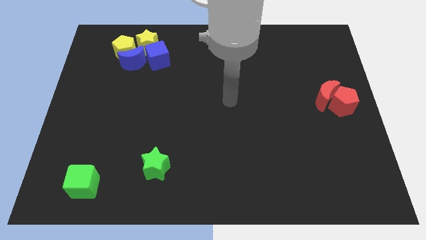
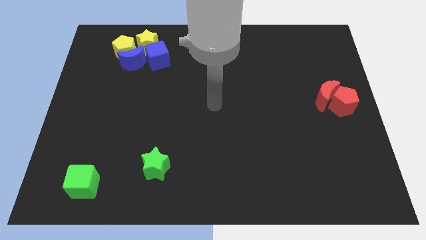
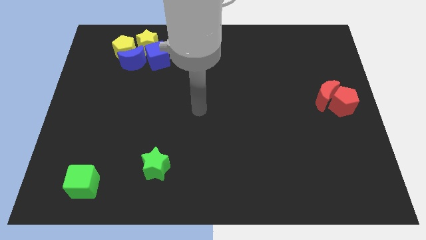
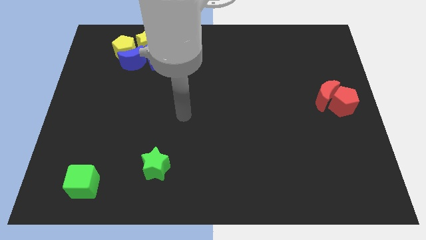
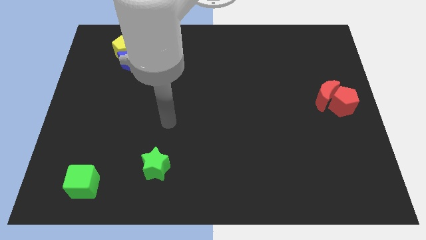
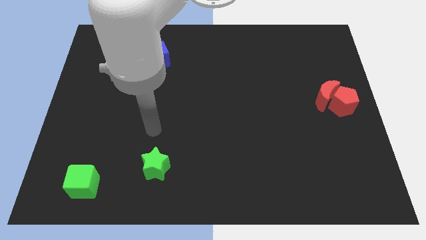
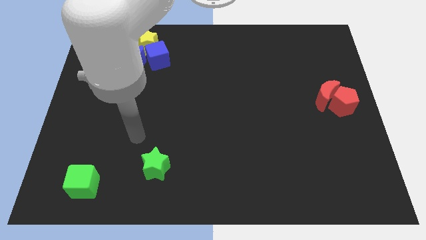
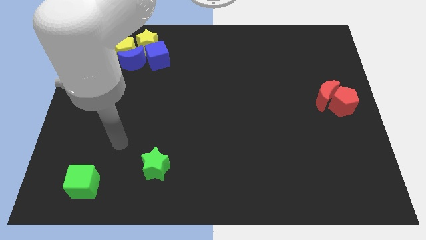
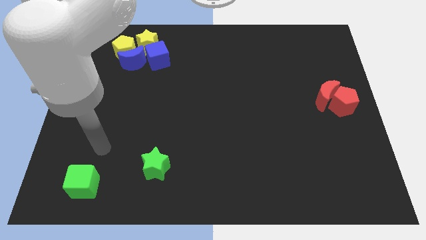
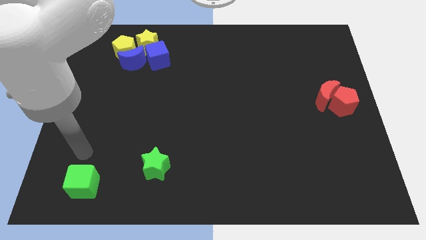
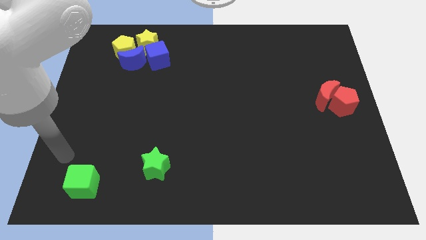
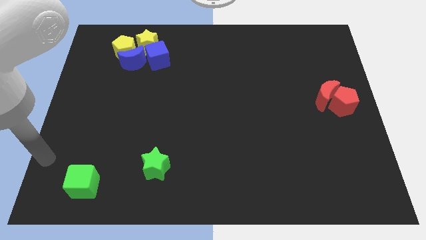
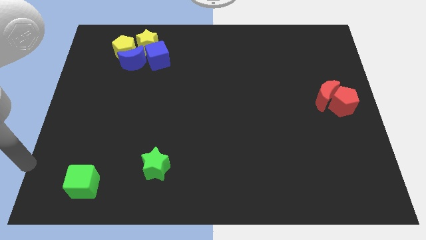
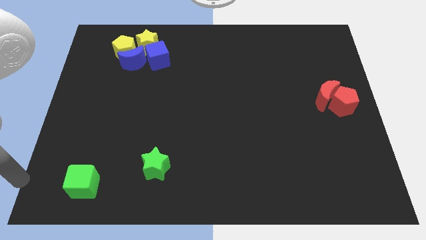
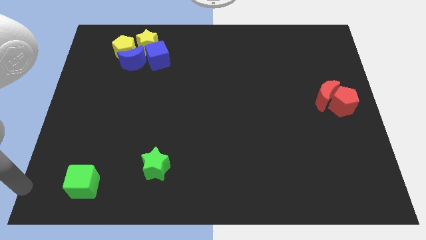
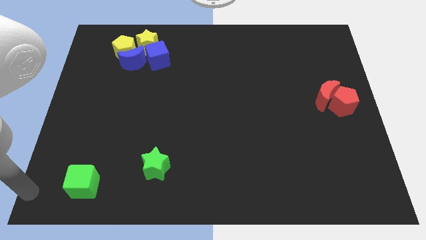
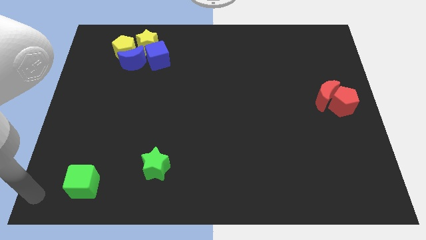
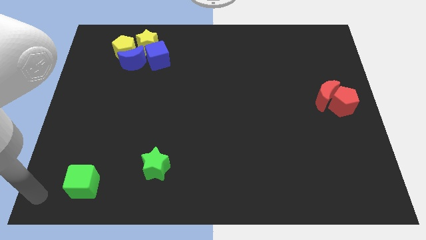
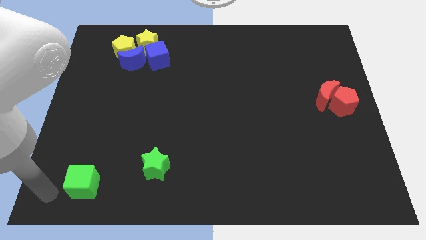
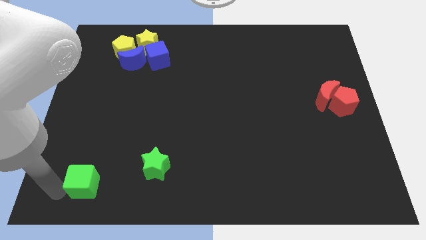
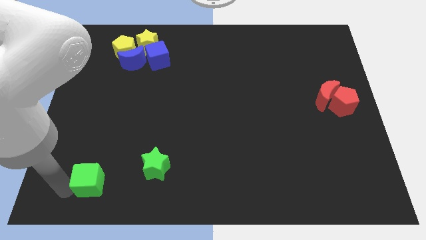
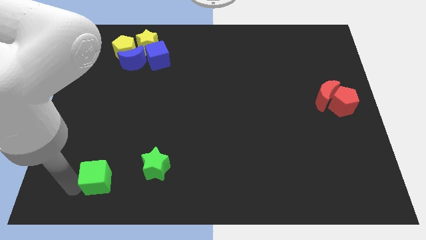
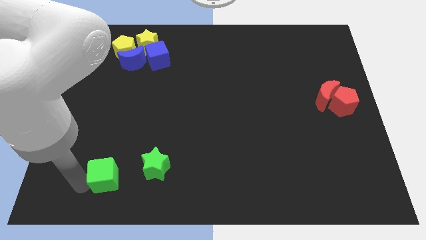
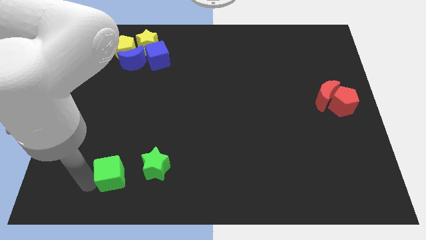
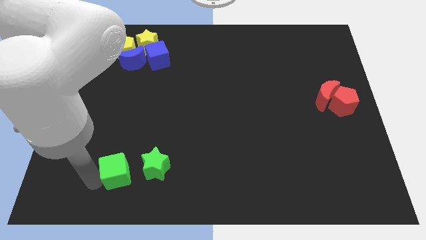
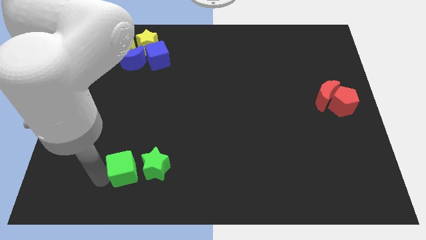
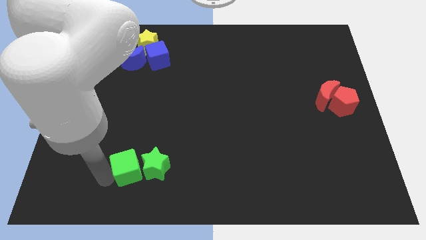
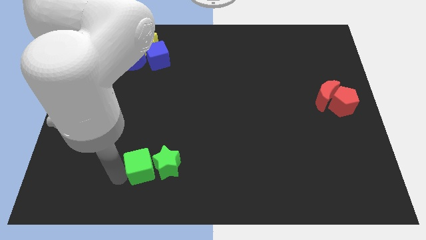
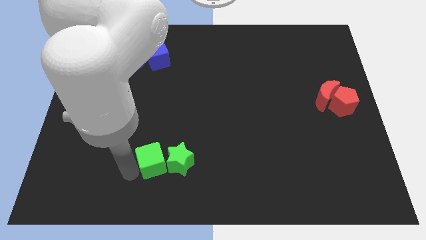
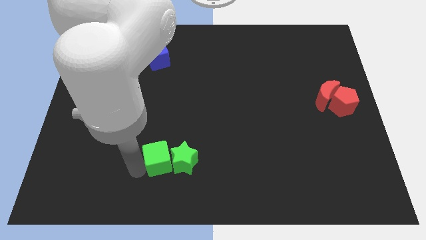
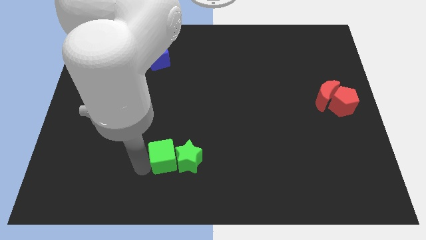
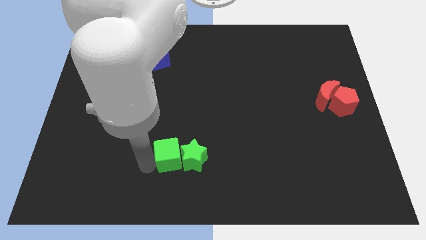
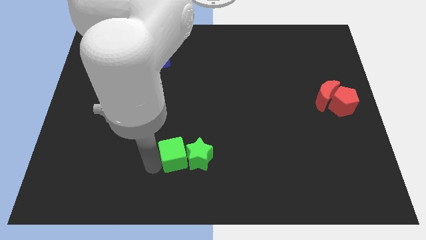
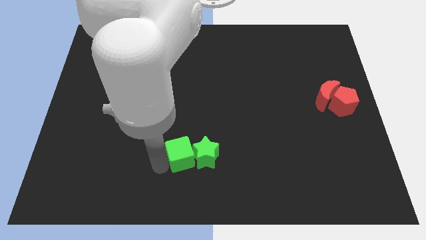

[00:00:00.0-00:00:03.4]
push the green cube into the green star

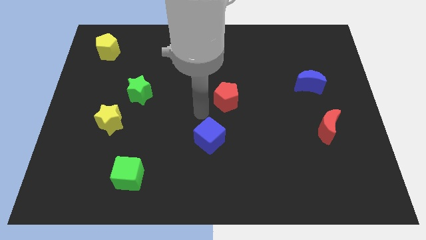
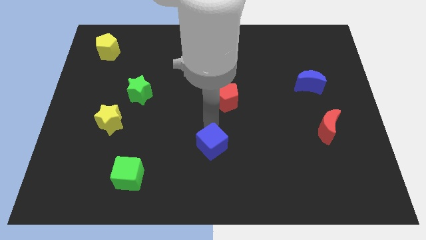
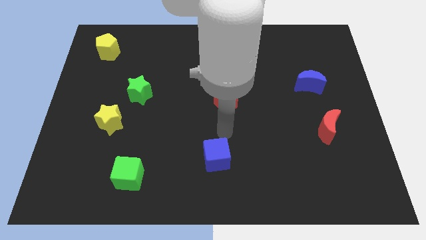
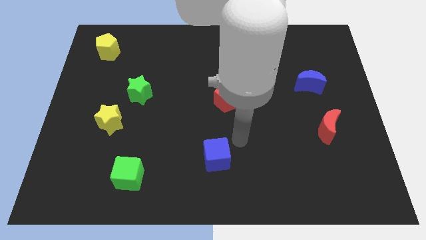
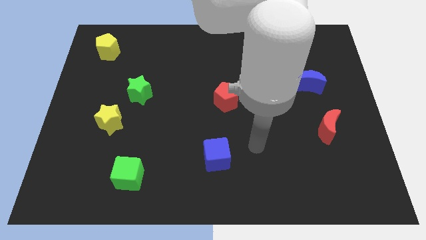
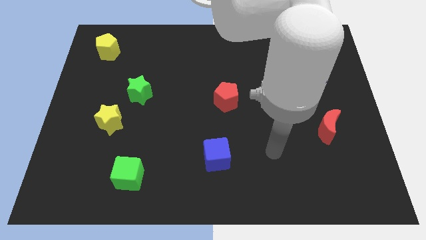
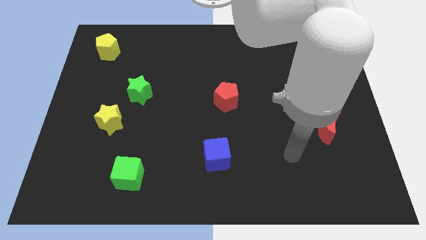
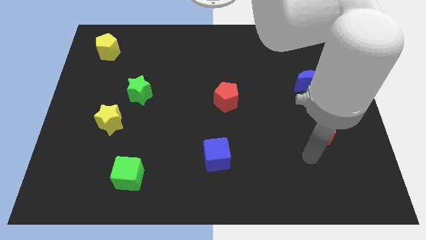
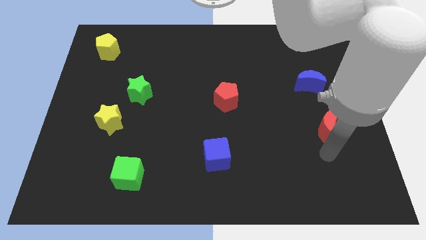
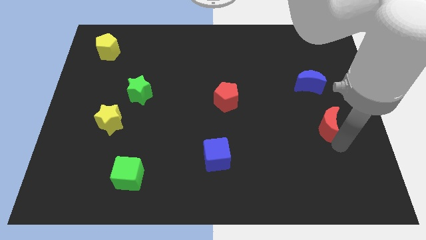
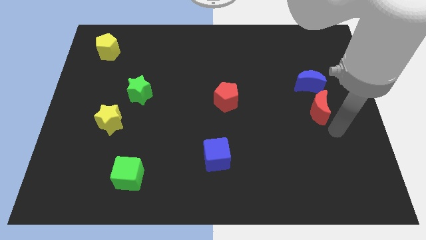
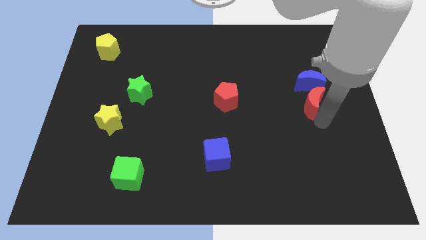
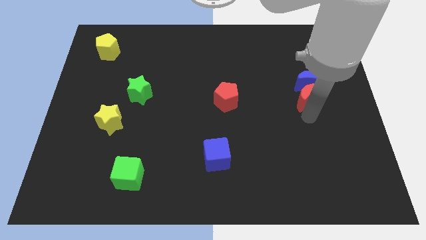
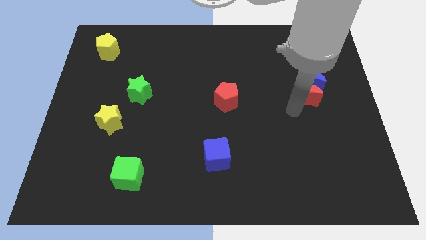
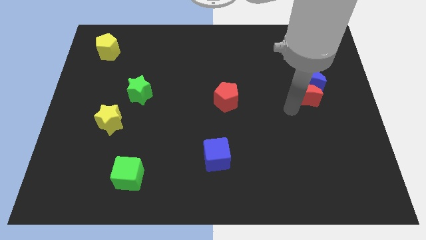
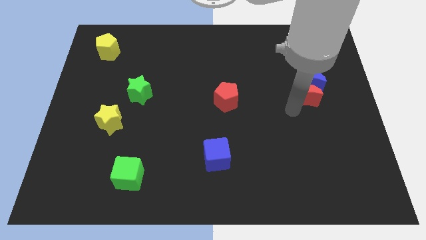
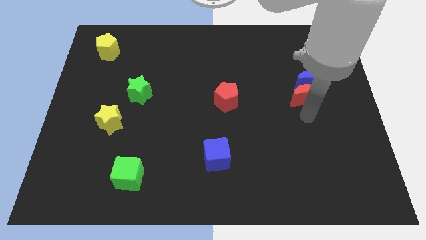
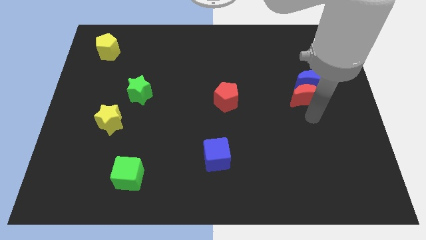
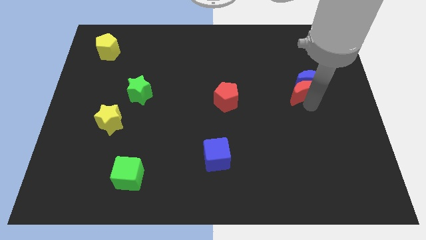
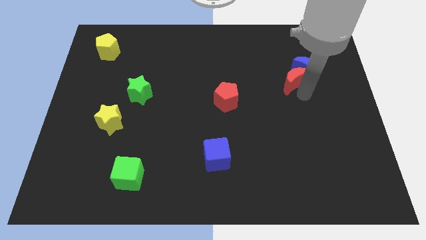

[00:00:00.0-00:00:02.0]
push the red crescent into the blue crescent

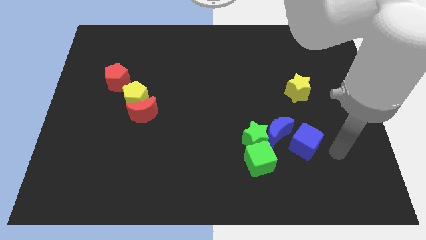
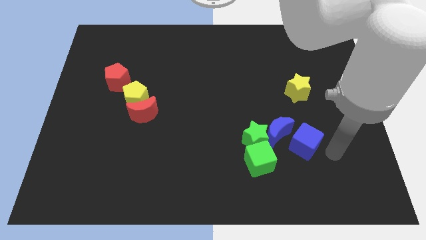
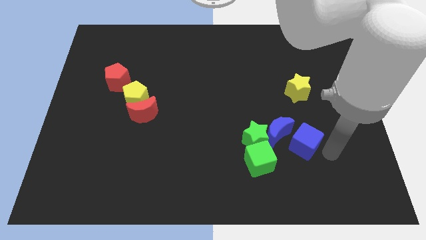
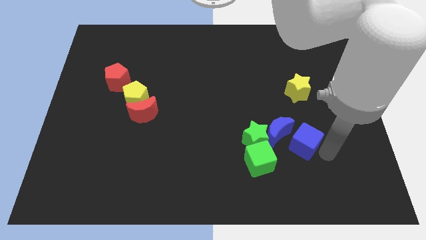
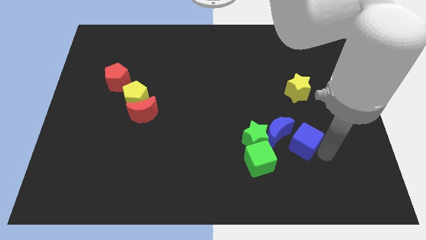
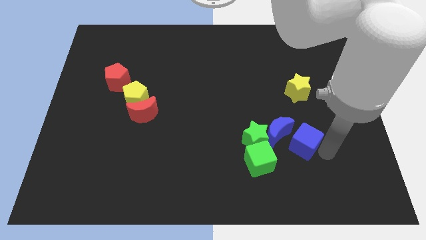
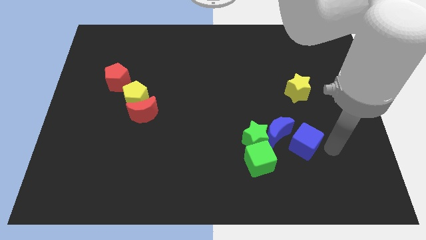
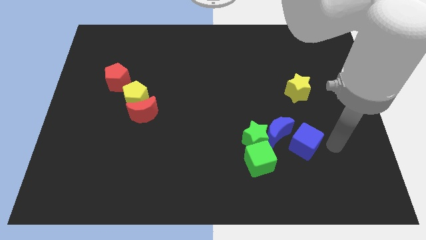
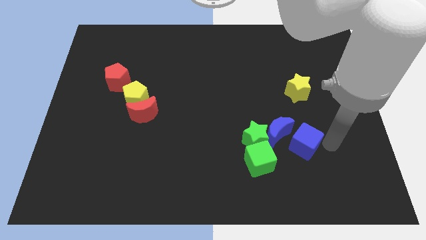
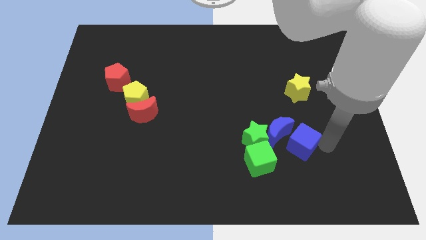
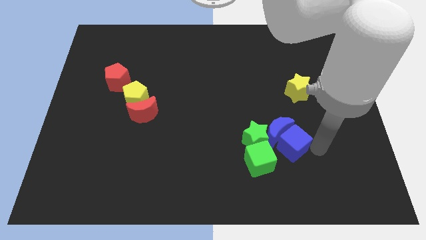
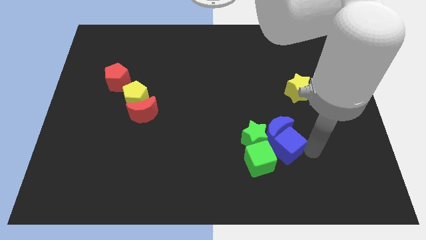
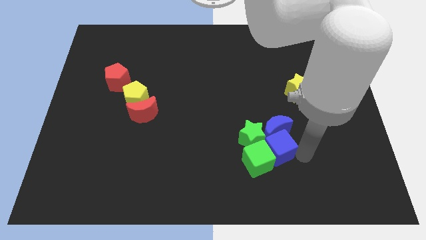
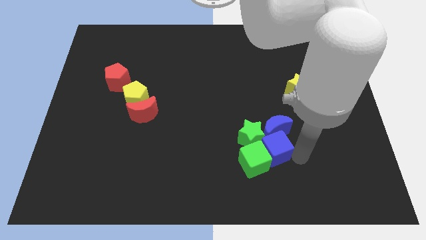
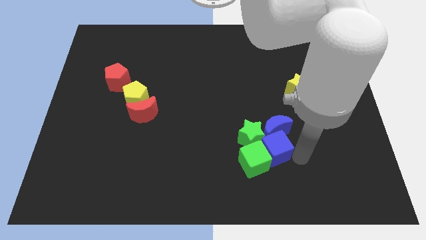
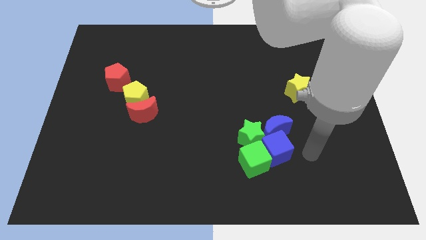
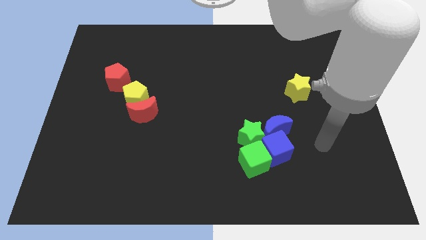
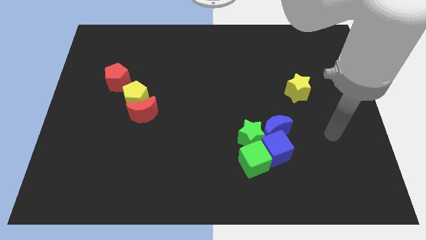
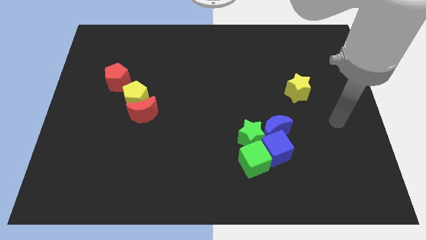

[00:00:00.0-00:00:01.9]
push the blue cube into the green cube

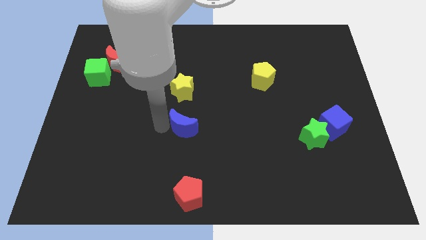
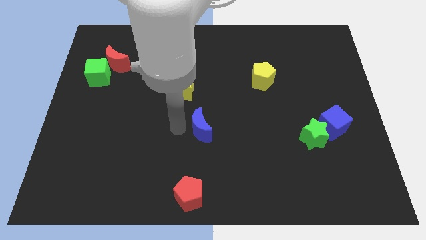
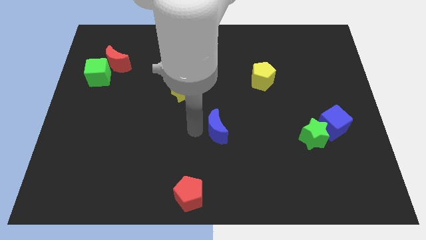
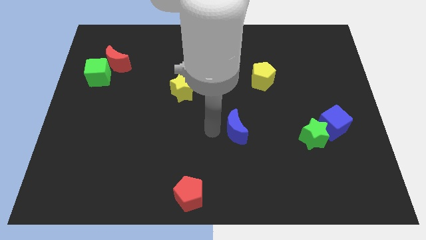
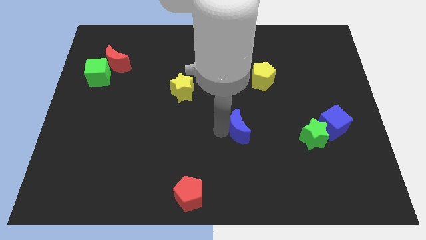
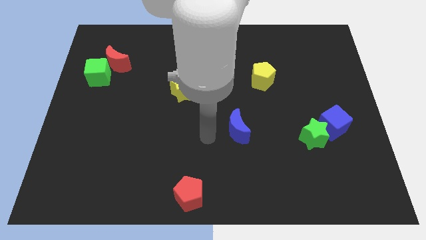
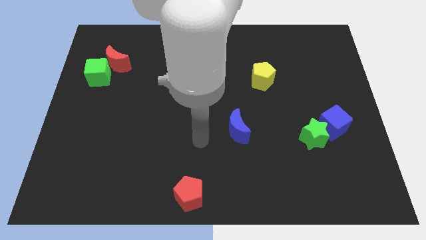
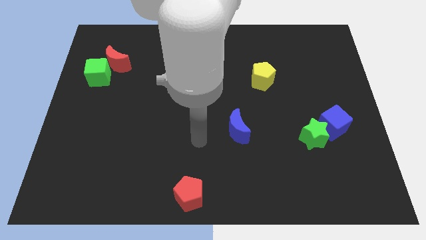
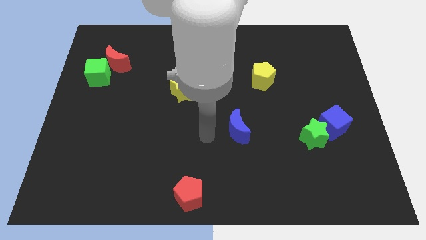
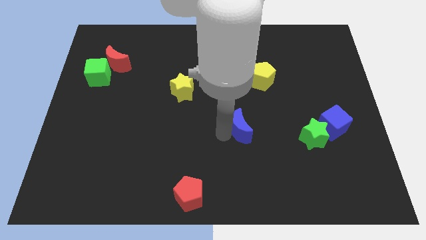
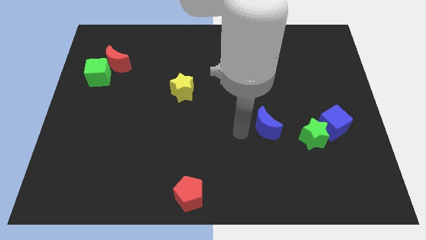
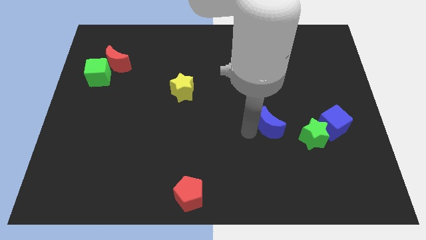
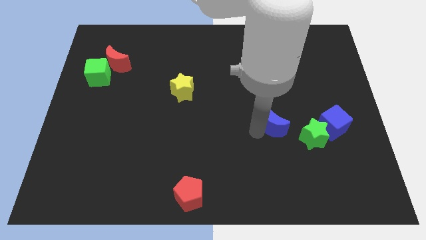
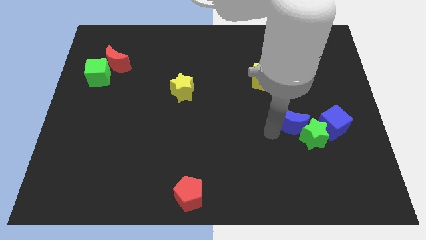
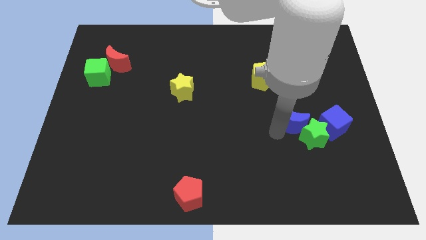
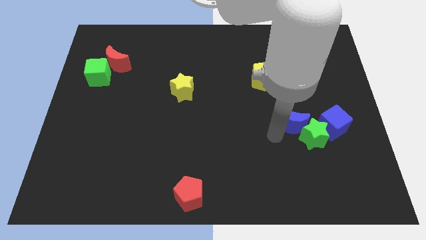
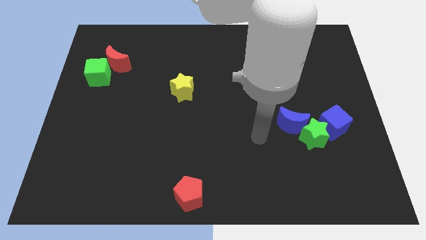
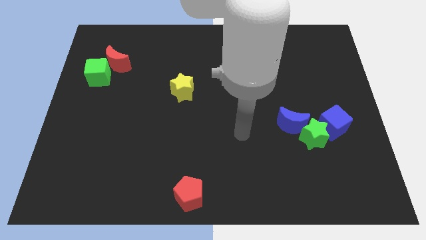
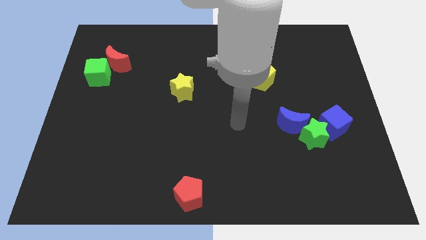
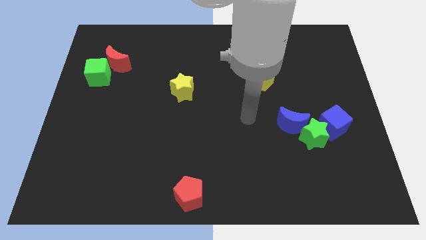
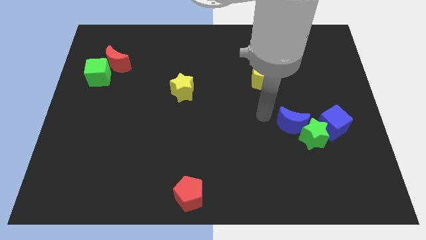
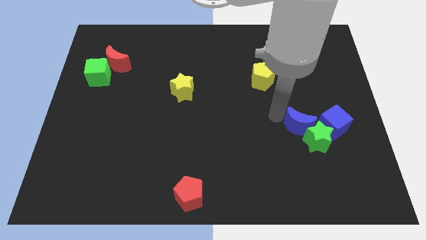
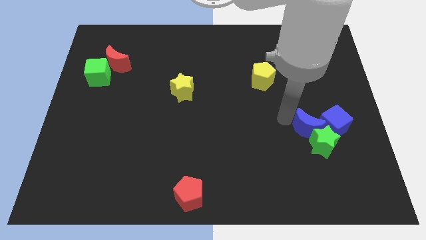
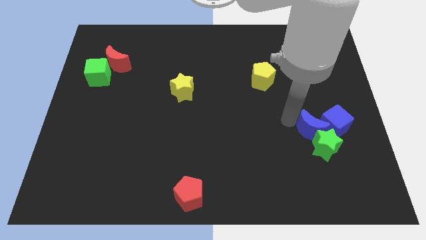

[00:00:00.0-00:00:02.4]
push blue crescent in between the green star and blue cube
